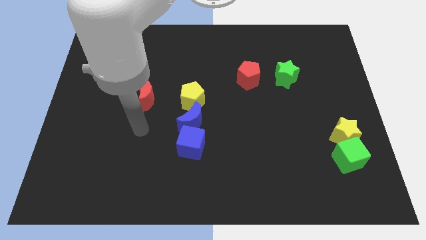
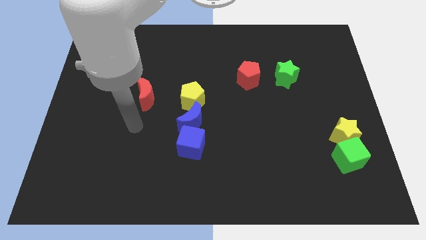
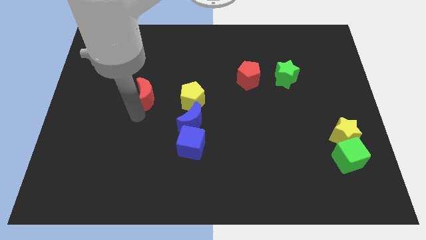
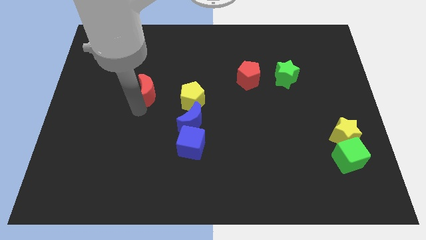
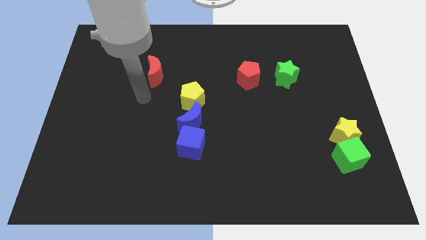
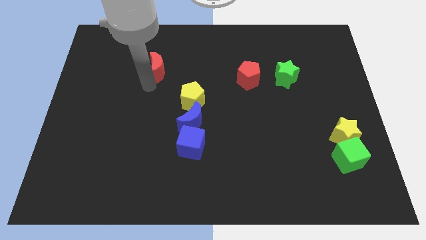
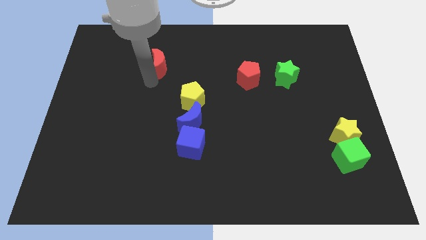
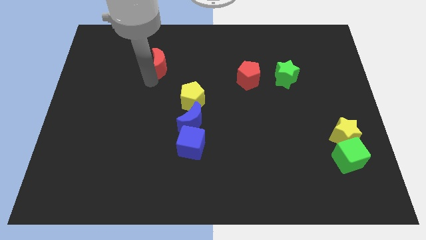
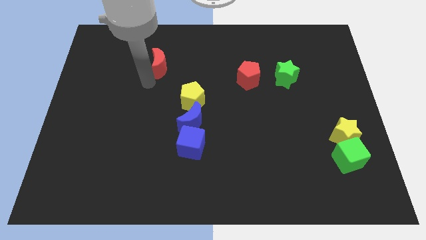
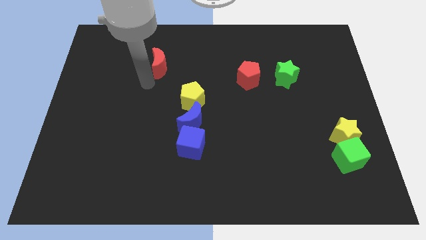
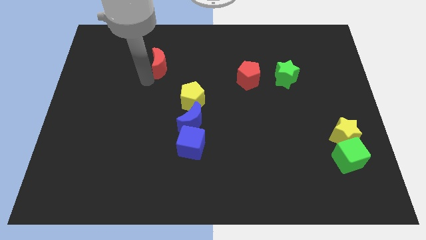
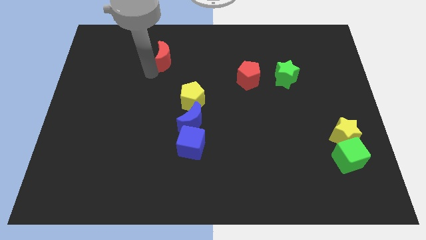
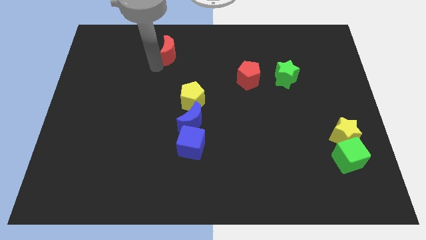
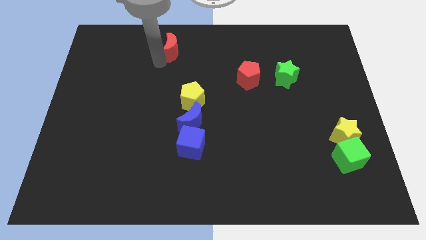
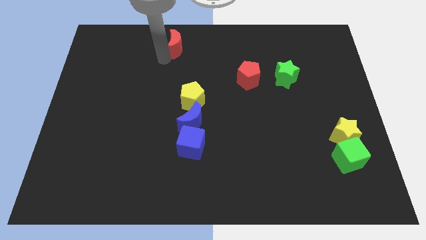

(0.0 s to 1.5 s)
push the red crescent to the top

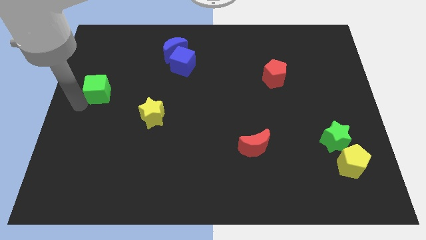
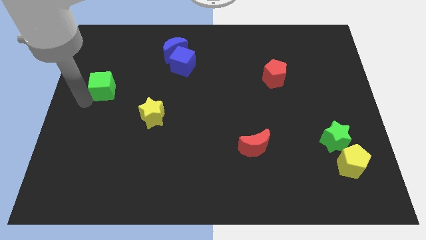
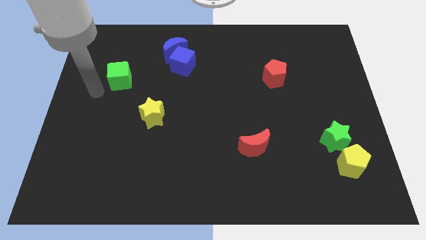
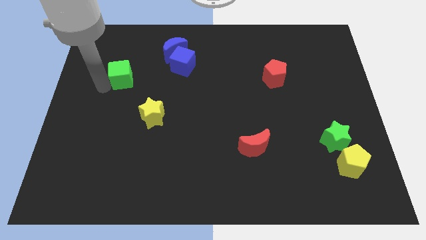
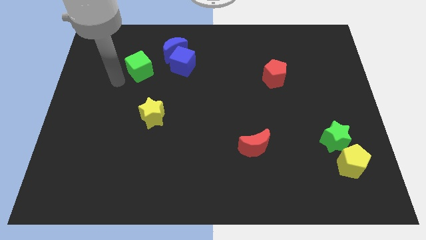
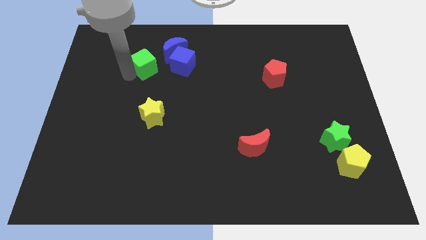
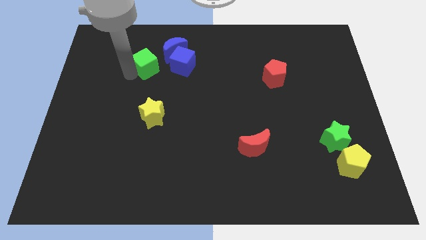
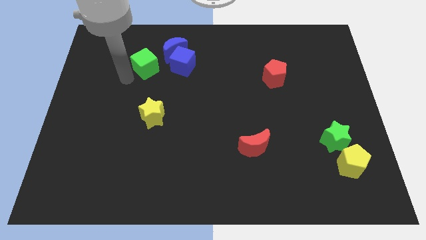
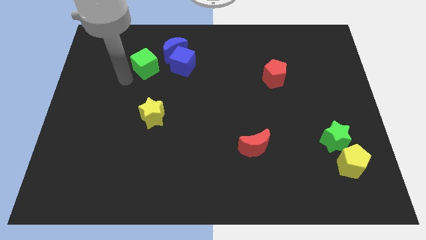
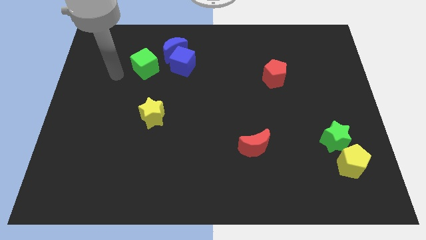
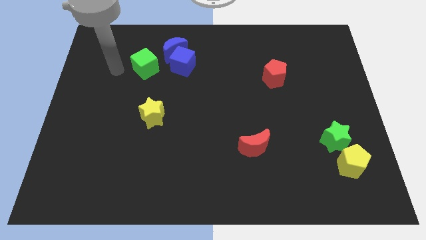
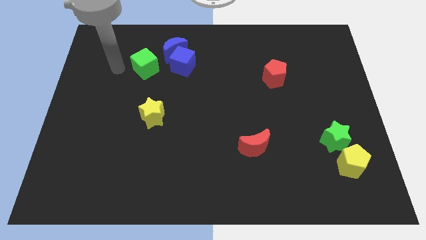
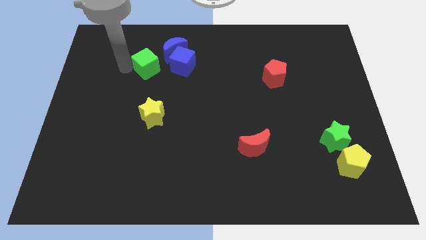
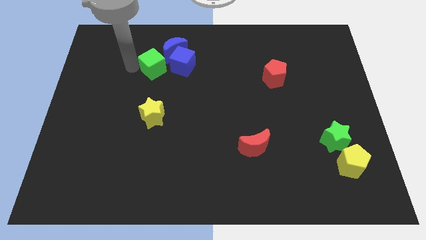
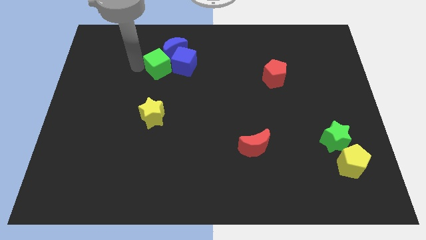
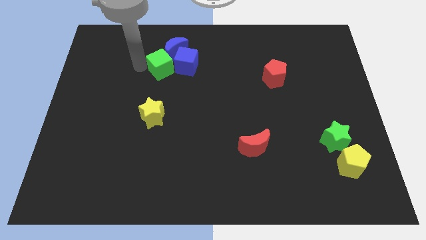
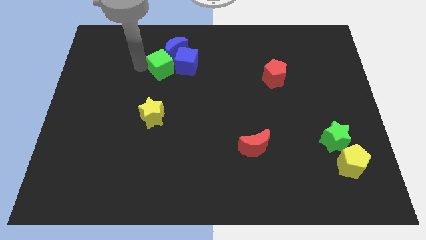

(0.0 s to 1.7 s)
push the green cube into the blue cube and blue crescent

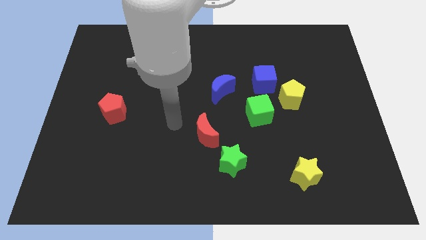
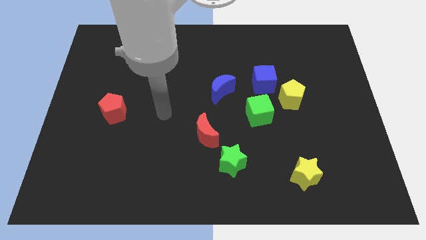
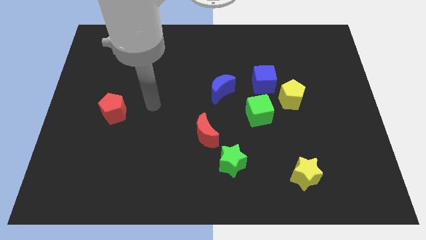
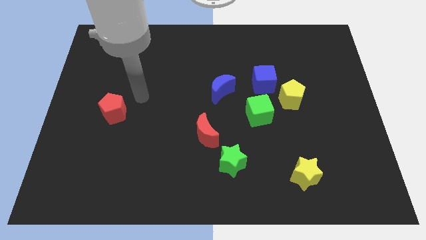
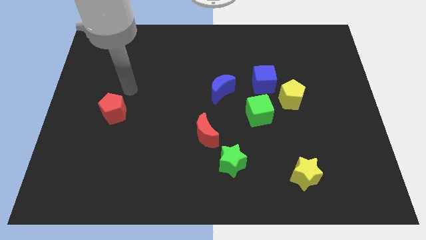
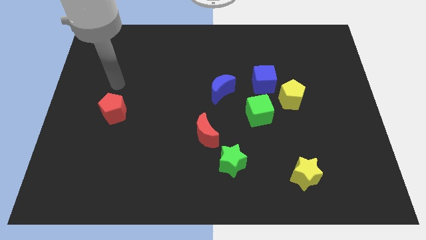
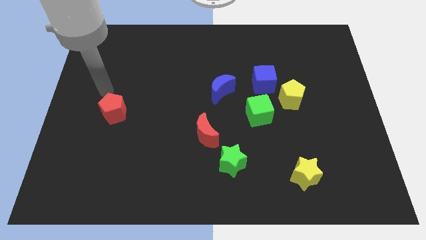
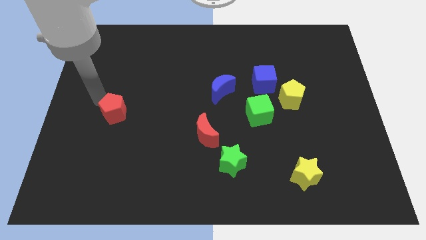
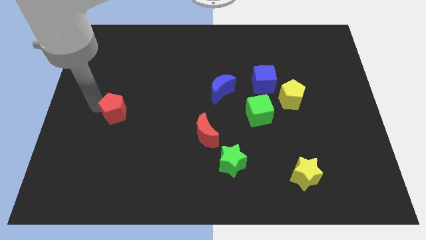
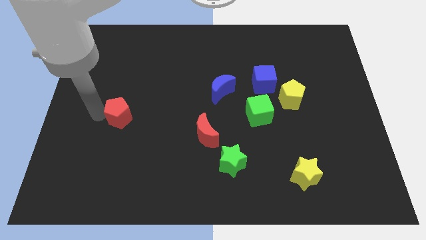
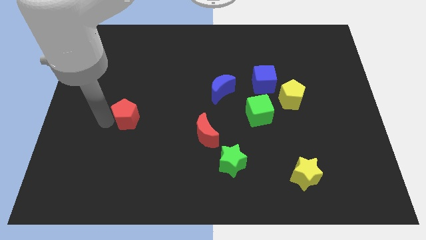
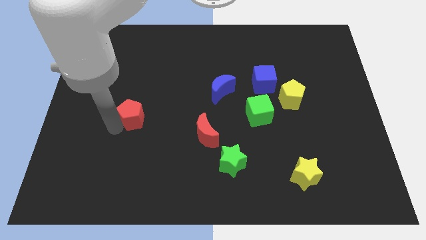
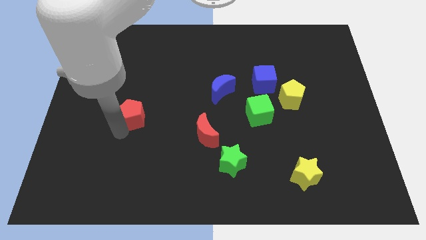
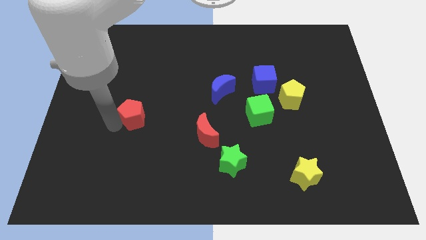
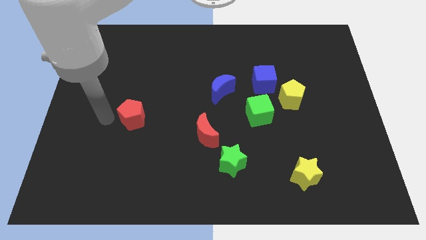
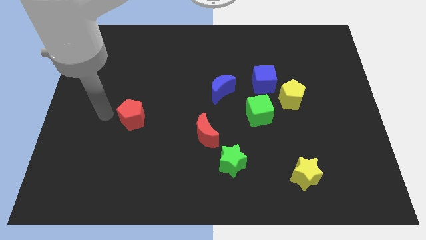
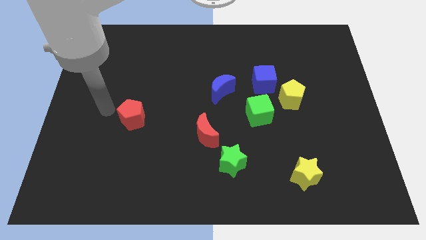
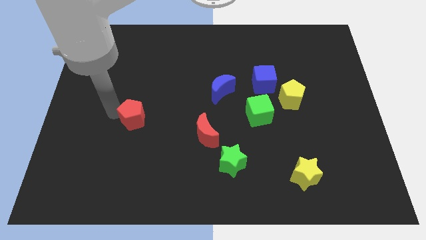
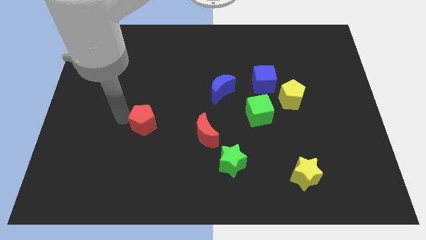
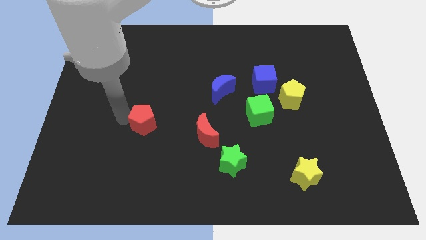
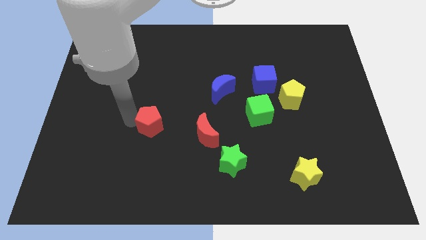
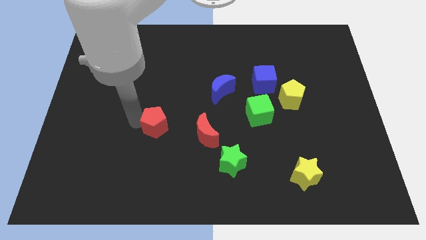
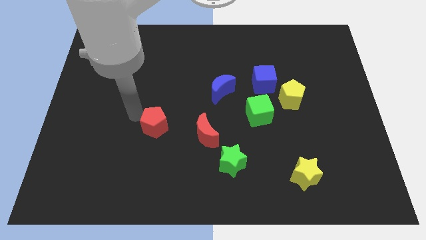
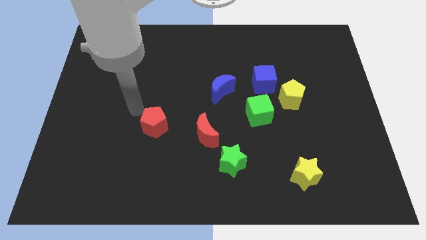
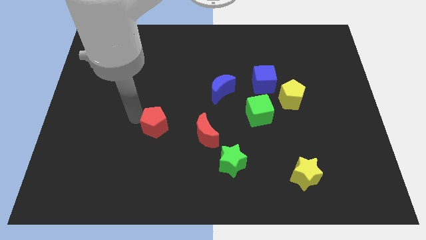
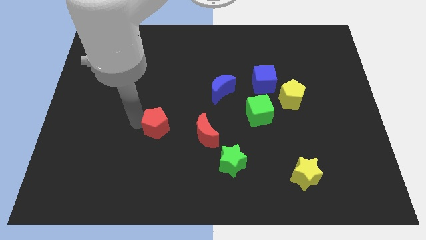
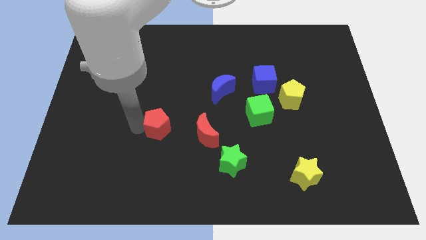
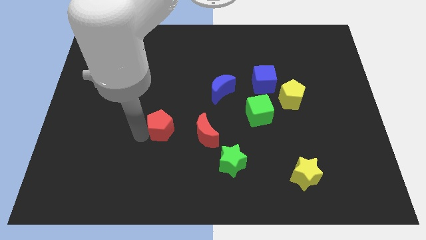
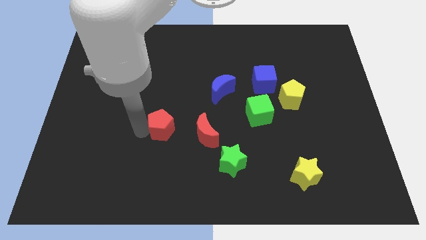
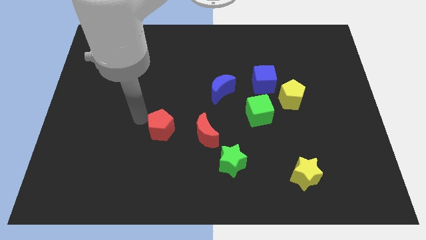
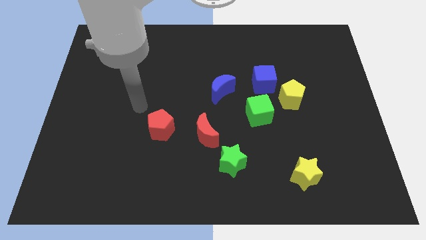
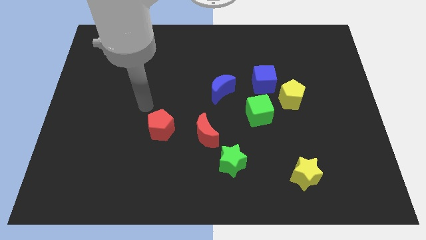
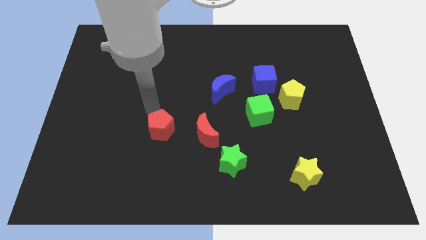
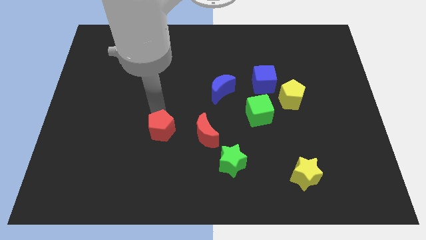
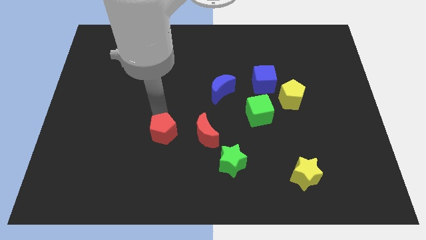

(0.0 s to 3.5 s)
push the red pentagon to the left side of the red moon

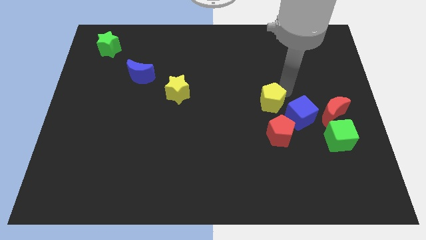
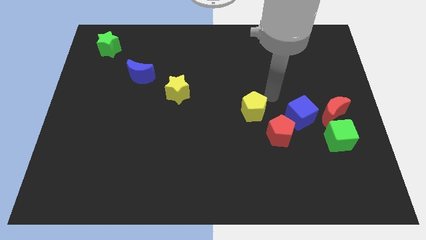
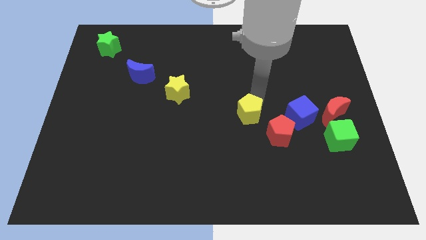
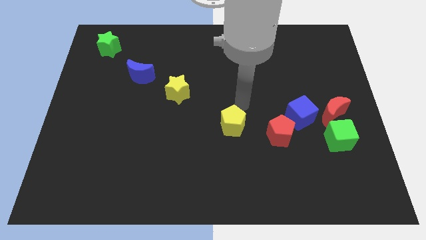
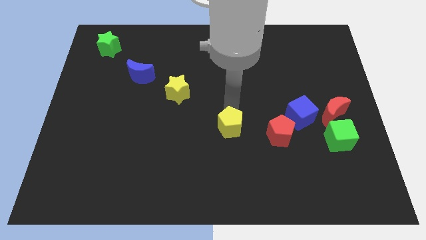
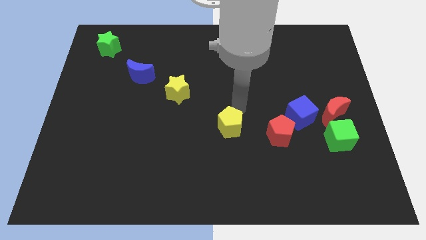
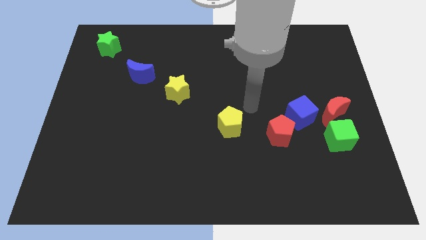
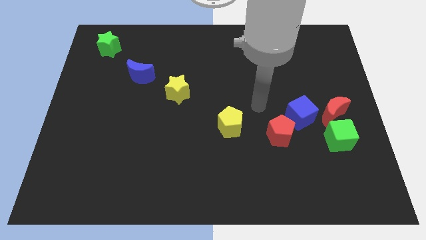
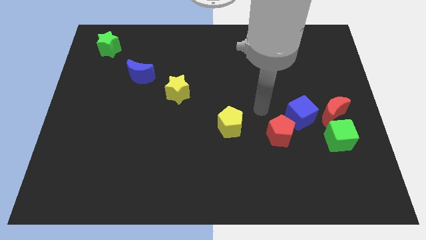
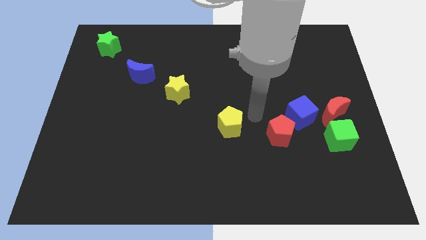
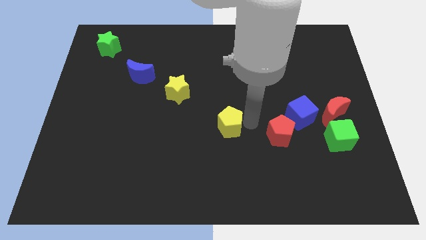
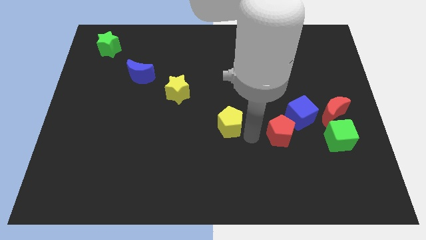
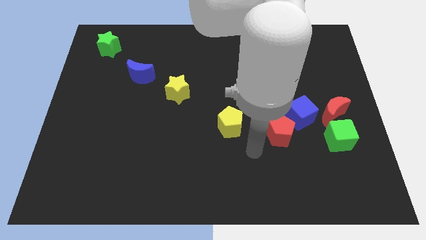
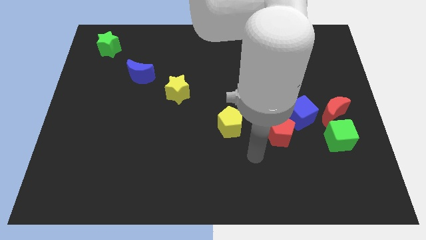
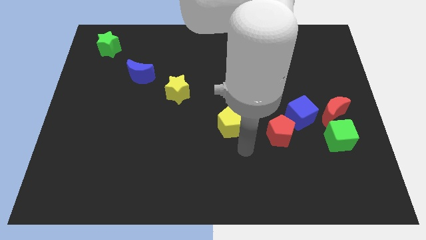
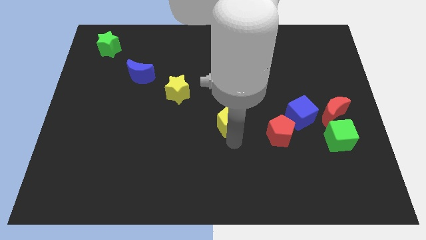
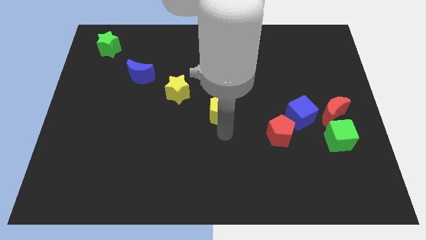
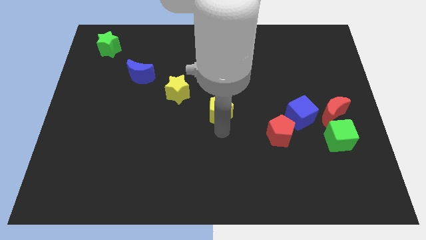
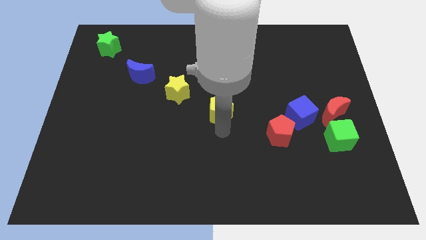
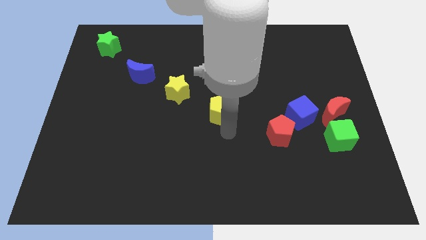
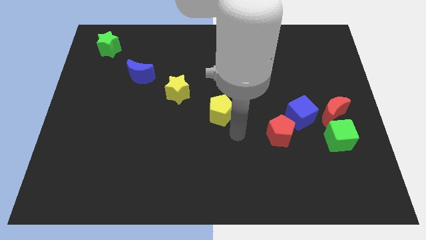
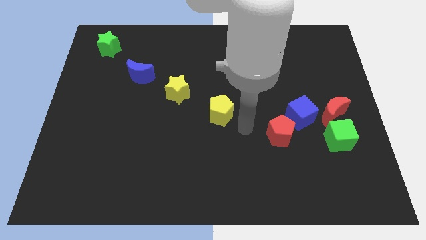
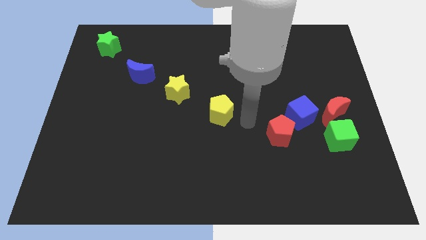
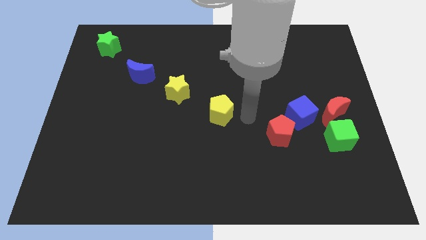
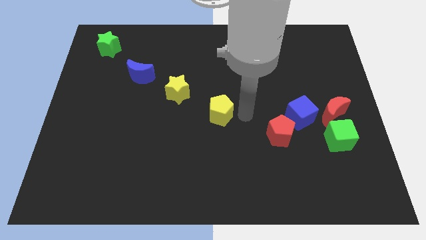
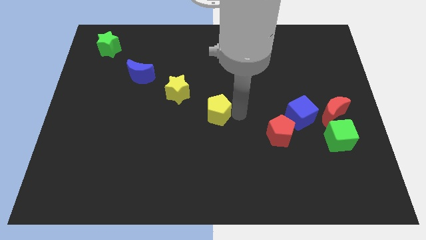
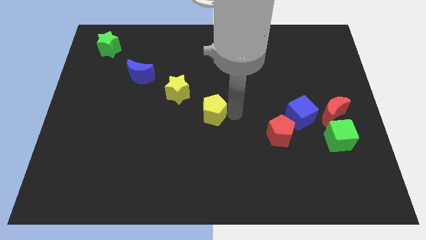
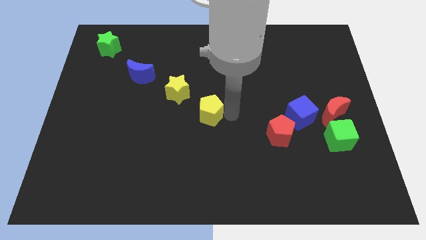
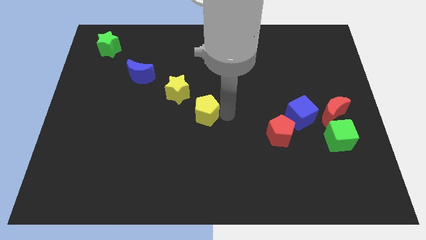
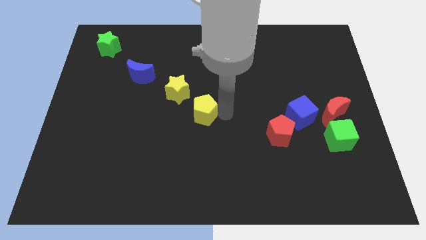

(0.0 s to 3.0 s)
move the yellow pentagon diagonally top left to red pentagon
